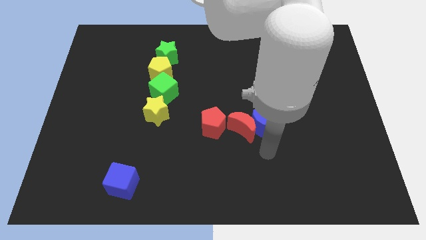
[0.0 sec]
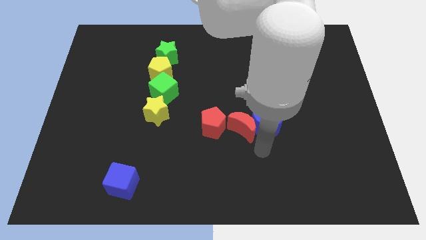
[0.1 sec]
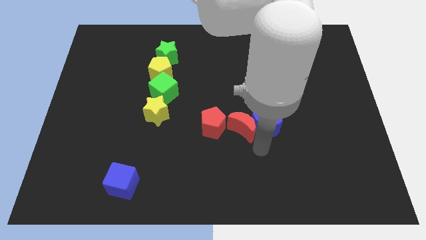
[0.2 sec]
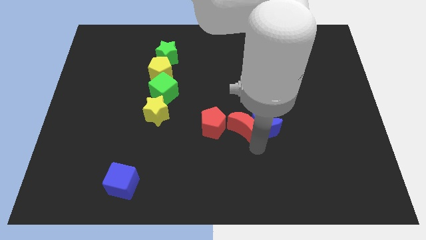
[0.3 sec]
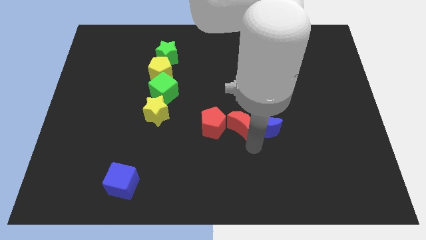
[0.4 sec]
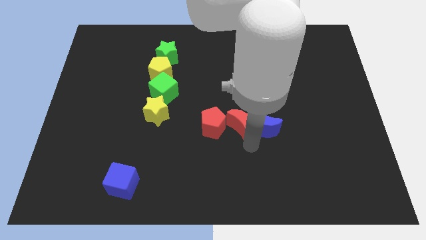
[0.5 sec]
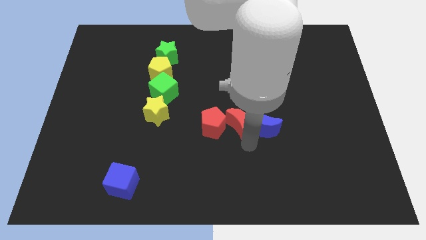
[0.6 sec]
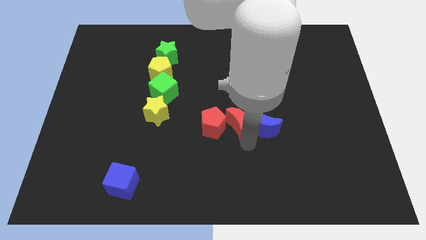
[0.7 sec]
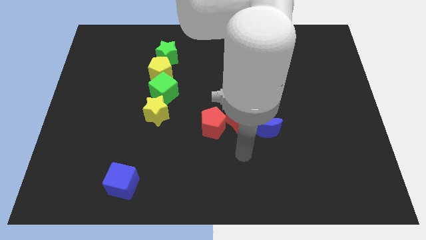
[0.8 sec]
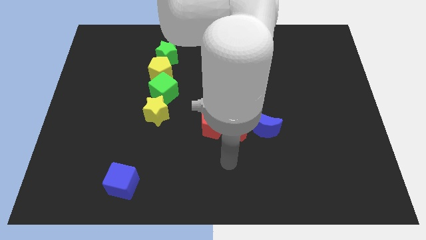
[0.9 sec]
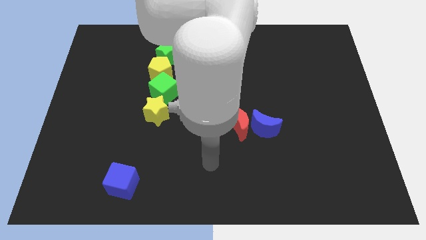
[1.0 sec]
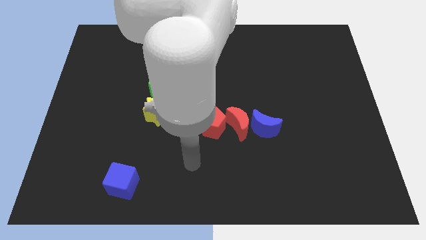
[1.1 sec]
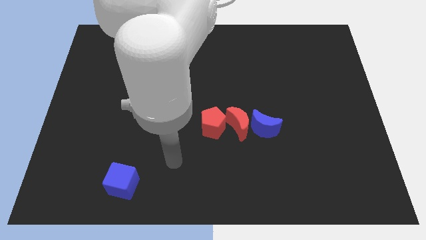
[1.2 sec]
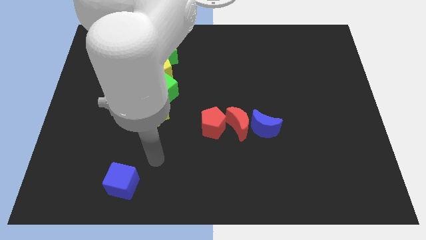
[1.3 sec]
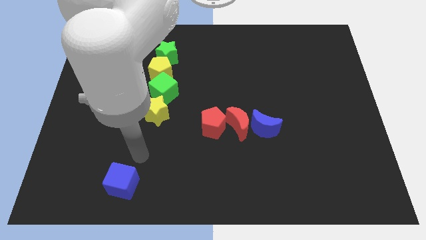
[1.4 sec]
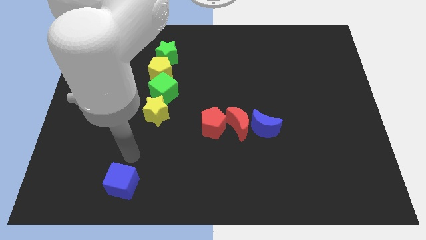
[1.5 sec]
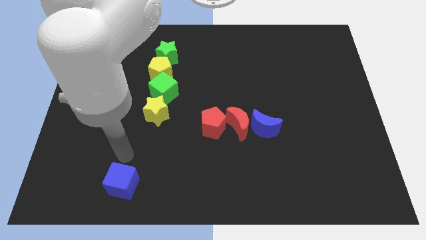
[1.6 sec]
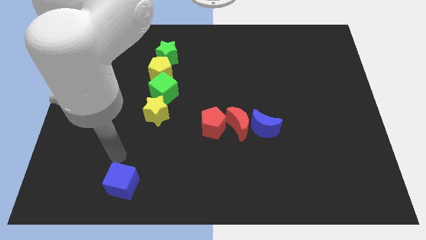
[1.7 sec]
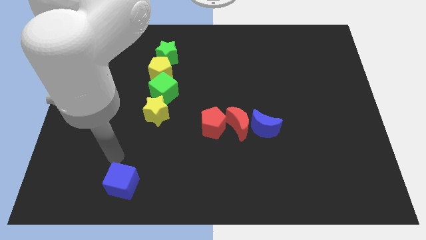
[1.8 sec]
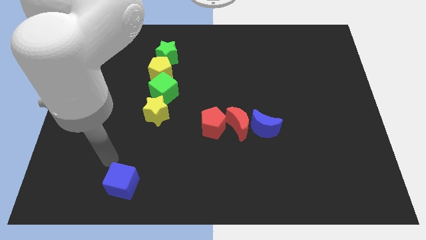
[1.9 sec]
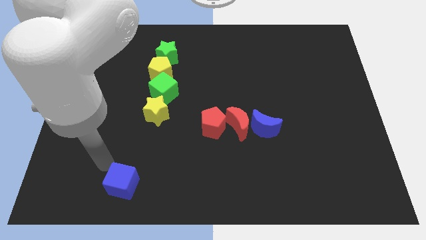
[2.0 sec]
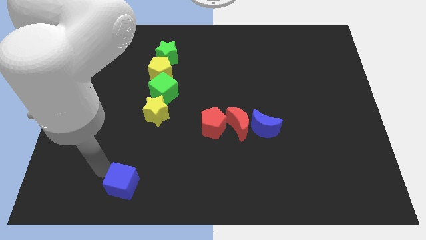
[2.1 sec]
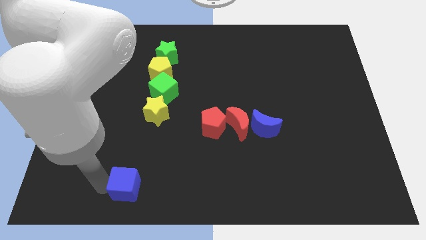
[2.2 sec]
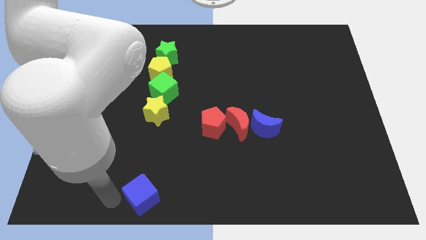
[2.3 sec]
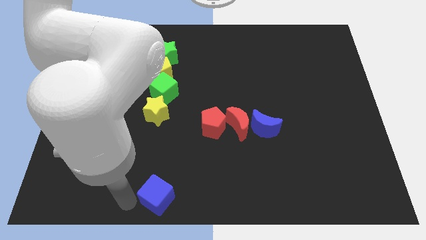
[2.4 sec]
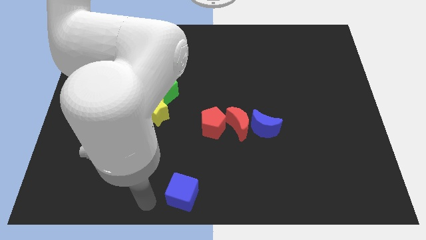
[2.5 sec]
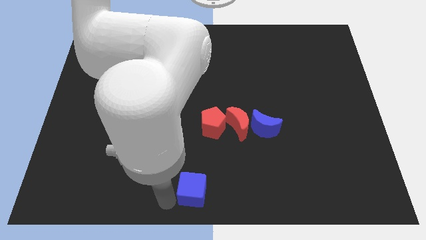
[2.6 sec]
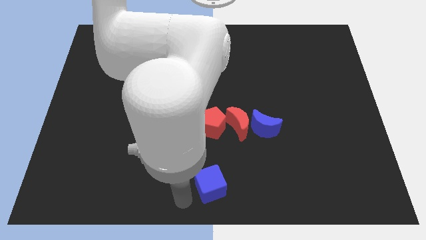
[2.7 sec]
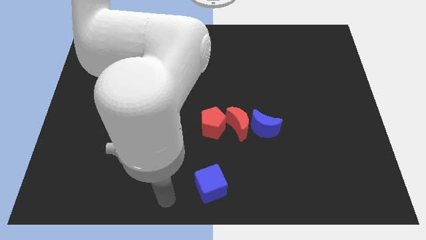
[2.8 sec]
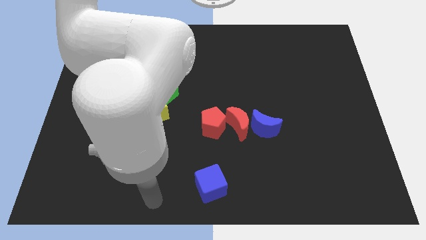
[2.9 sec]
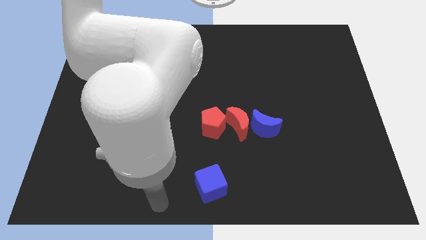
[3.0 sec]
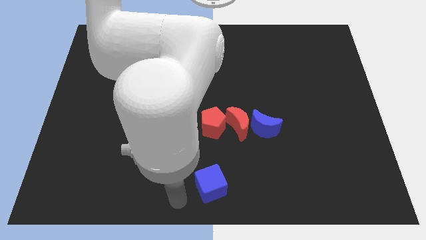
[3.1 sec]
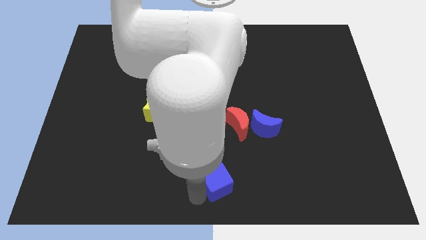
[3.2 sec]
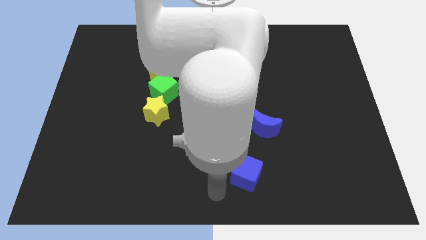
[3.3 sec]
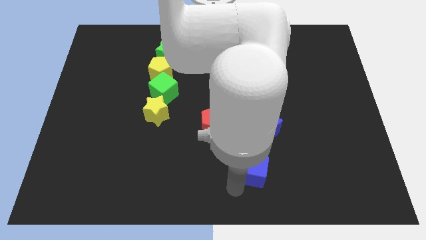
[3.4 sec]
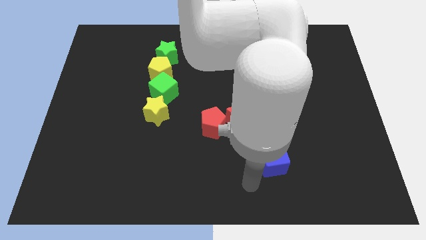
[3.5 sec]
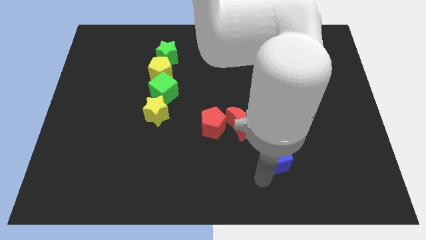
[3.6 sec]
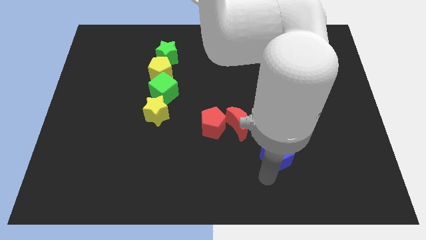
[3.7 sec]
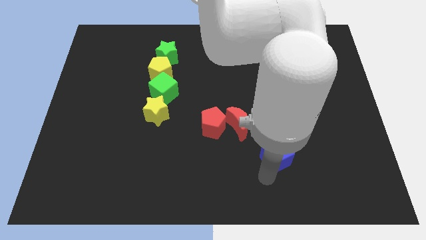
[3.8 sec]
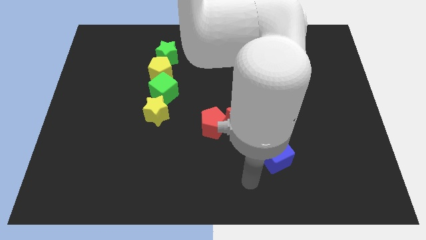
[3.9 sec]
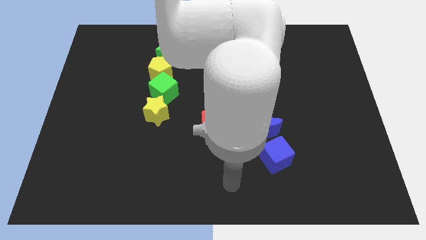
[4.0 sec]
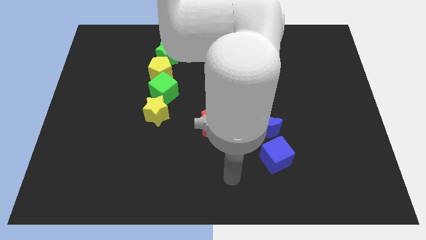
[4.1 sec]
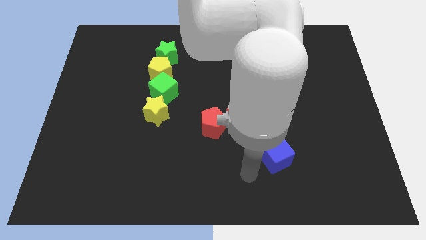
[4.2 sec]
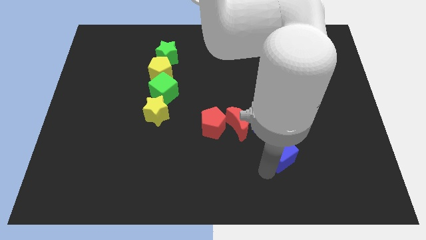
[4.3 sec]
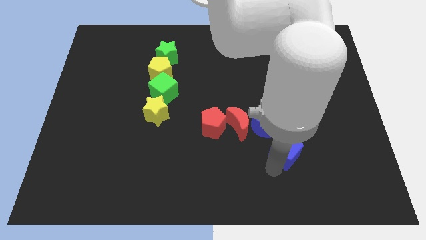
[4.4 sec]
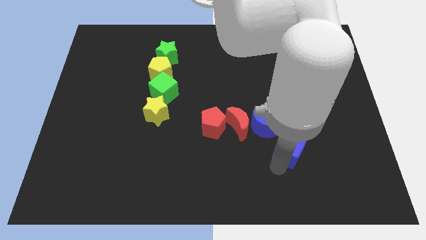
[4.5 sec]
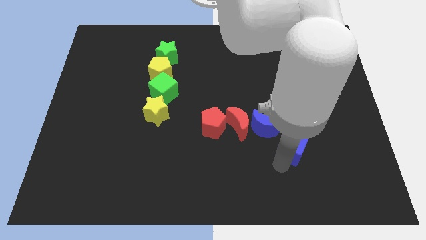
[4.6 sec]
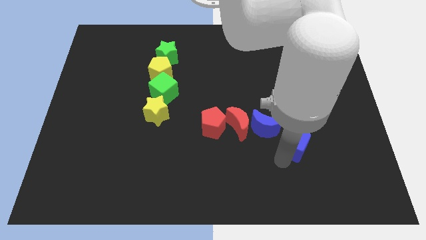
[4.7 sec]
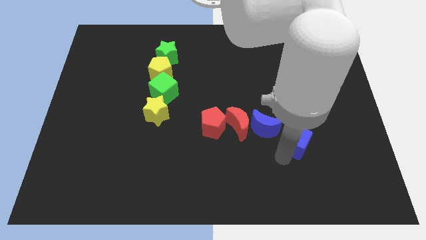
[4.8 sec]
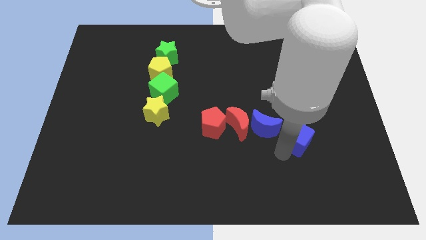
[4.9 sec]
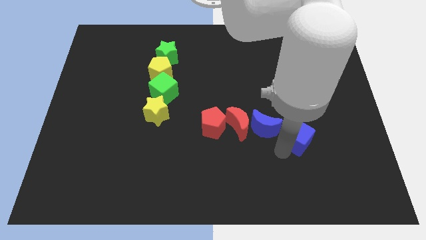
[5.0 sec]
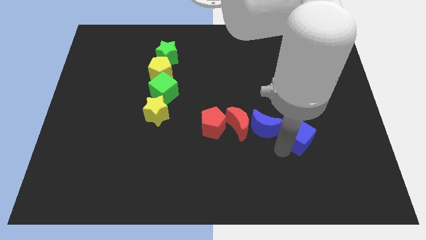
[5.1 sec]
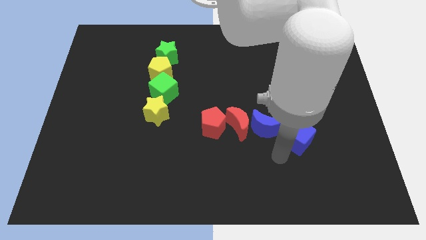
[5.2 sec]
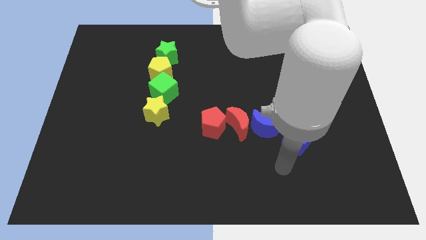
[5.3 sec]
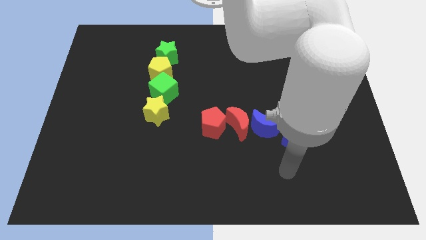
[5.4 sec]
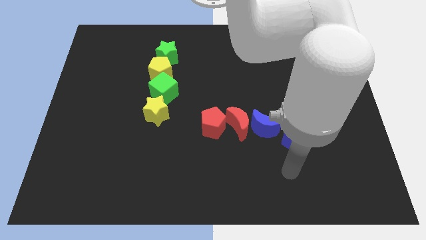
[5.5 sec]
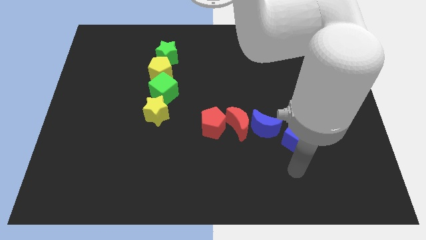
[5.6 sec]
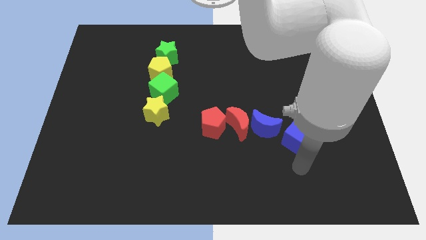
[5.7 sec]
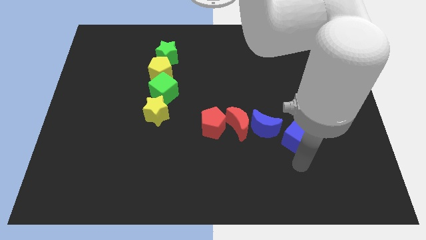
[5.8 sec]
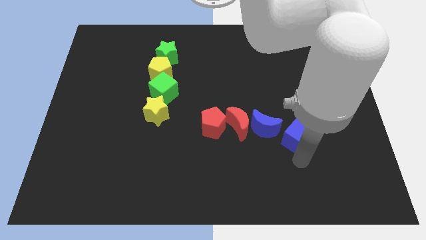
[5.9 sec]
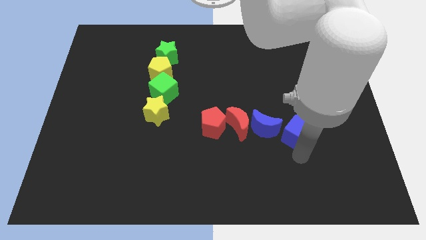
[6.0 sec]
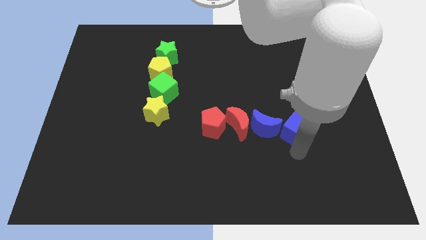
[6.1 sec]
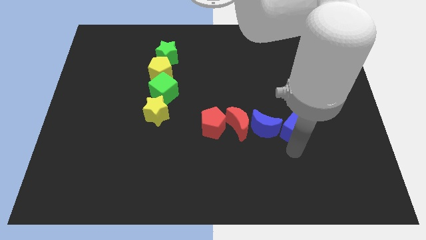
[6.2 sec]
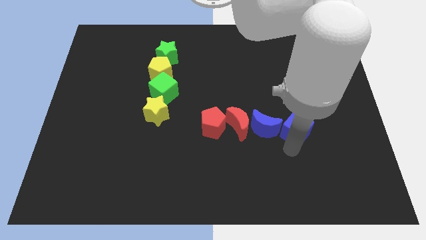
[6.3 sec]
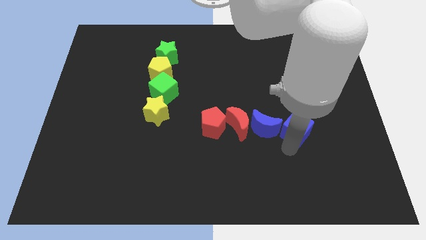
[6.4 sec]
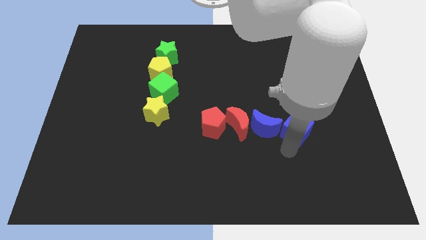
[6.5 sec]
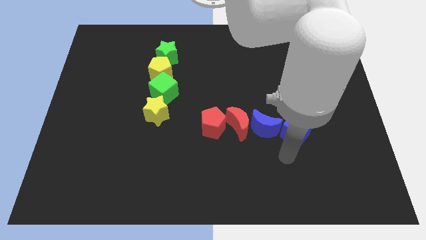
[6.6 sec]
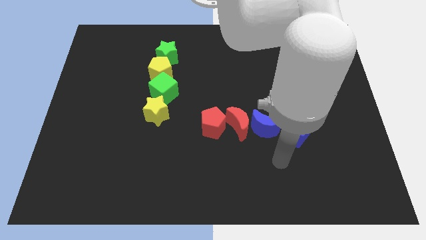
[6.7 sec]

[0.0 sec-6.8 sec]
place the blue cube right to the blue crescent

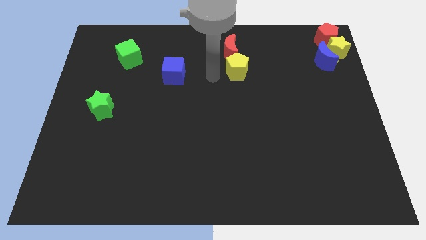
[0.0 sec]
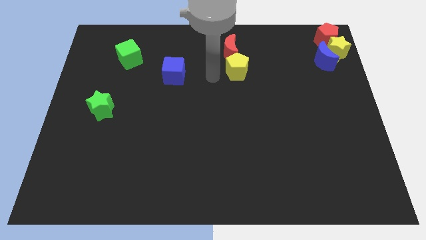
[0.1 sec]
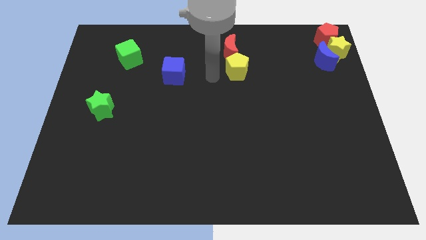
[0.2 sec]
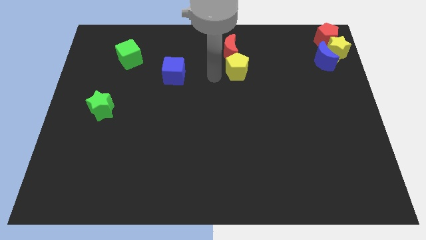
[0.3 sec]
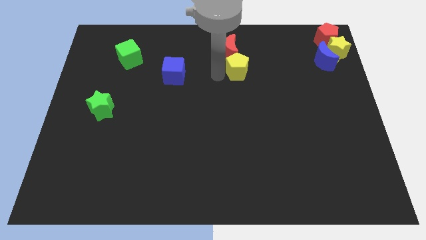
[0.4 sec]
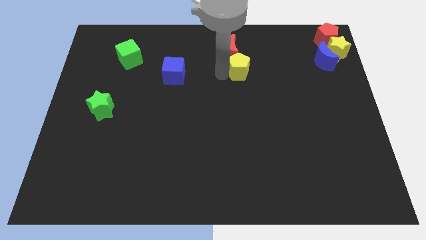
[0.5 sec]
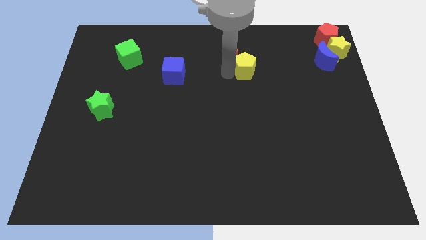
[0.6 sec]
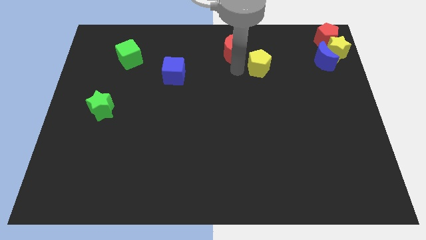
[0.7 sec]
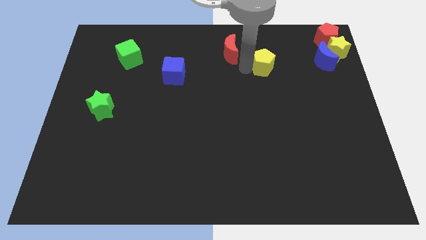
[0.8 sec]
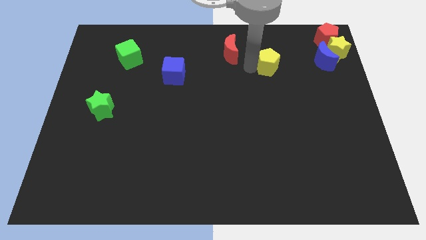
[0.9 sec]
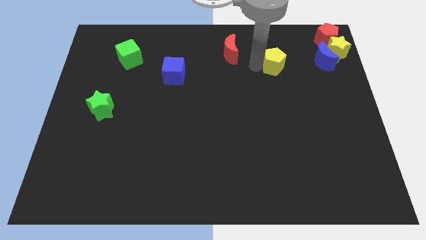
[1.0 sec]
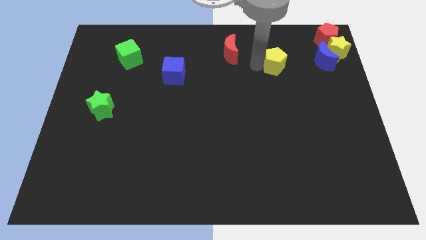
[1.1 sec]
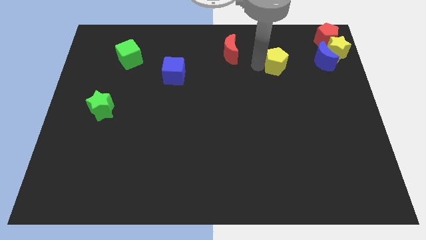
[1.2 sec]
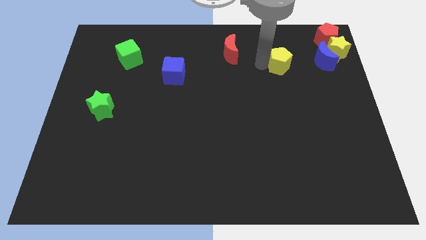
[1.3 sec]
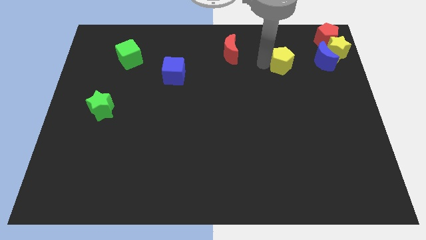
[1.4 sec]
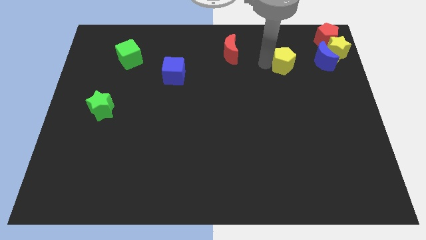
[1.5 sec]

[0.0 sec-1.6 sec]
move the yellow pentagon away from the red moon

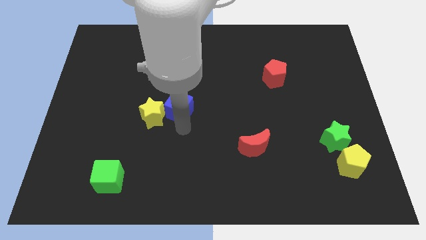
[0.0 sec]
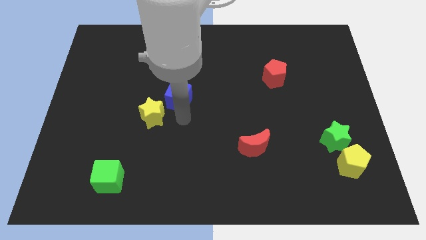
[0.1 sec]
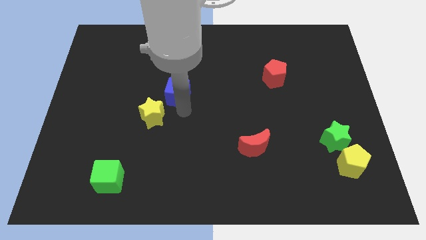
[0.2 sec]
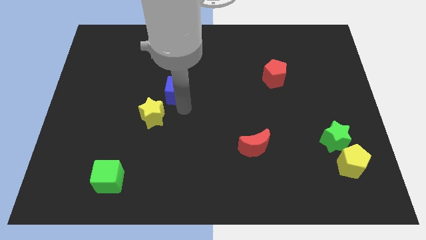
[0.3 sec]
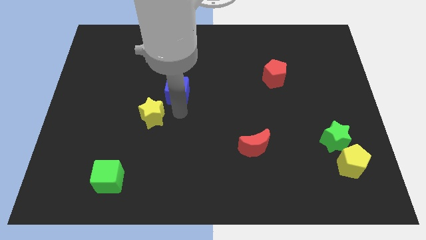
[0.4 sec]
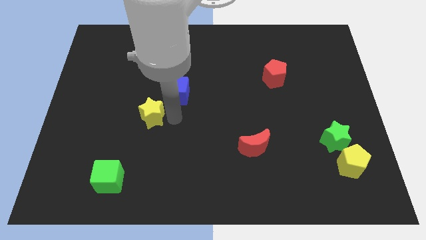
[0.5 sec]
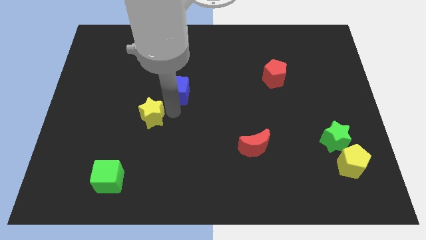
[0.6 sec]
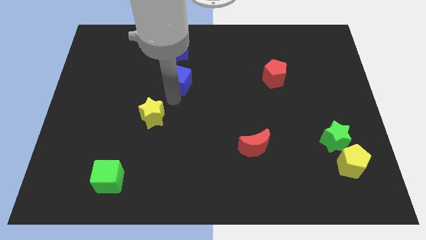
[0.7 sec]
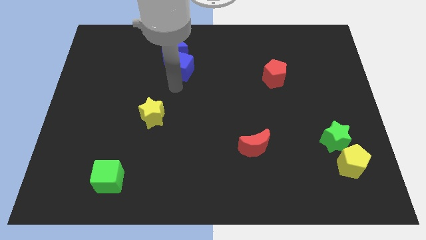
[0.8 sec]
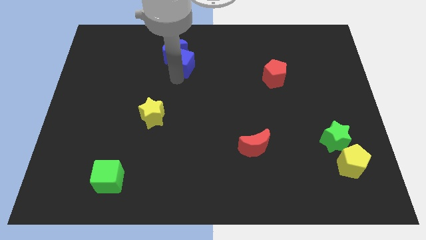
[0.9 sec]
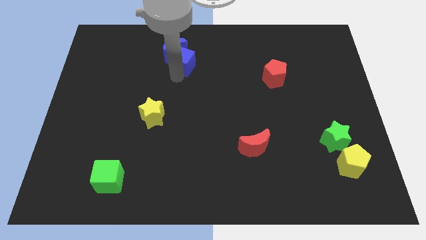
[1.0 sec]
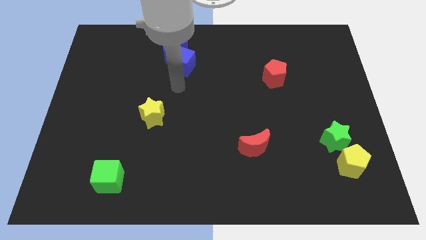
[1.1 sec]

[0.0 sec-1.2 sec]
push the blue cube towards the bottom left of blue crescent
